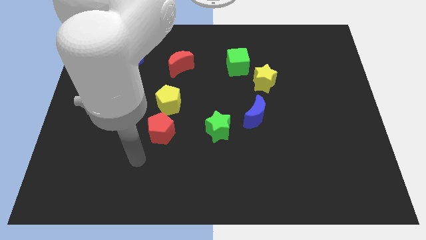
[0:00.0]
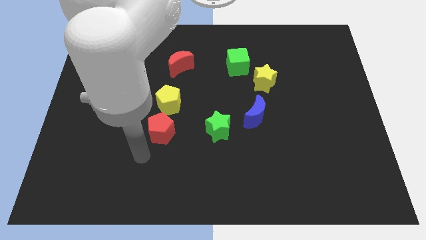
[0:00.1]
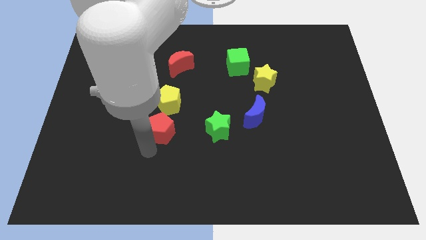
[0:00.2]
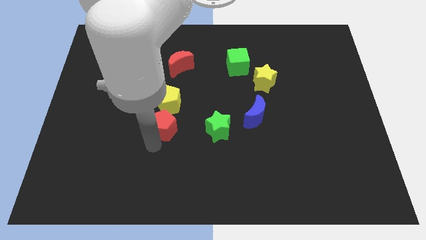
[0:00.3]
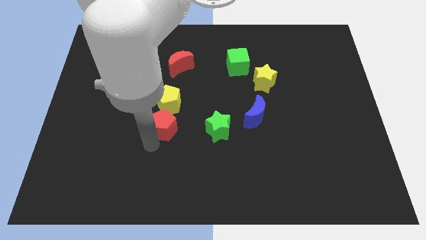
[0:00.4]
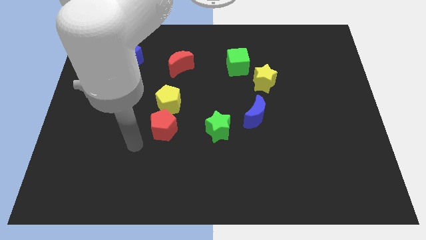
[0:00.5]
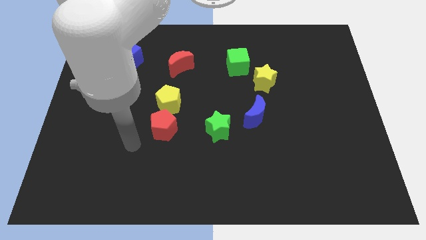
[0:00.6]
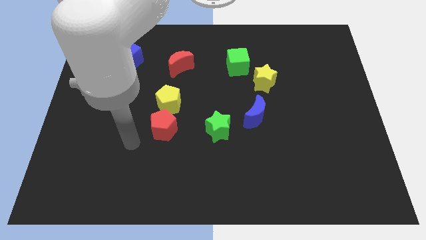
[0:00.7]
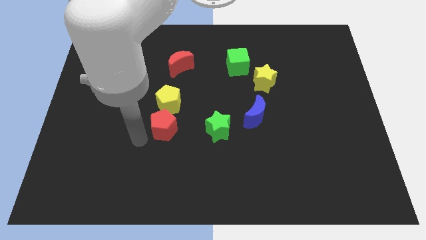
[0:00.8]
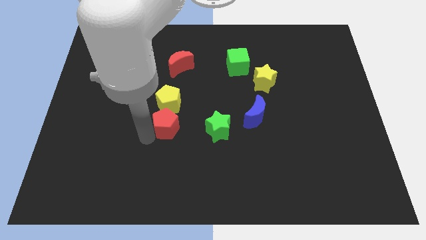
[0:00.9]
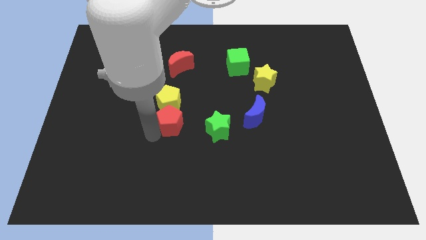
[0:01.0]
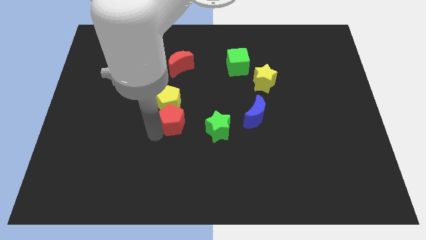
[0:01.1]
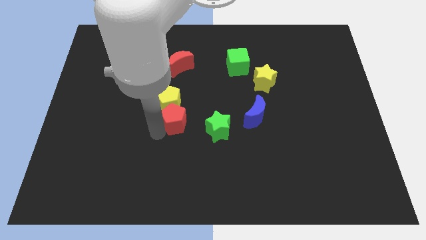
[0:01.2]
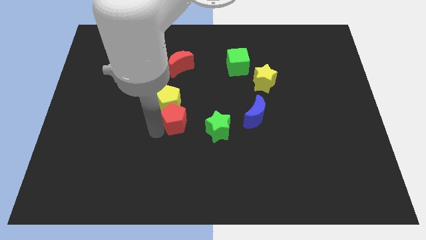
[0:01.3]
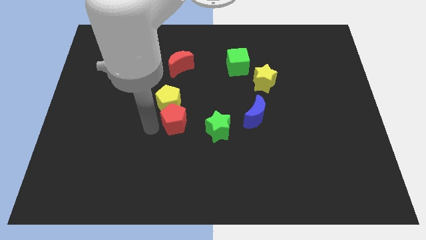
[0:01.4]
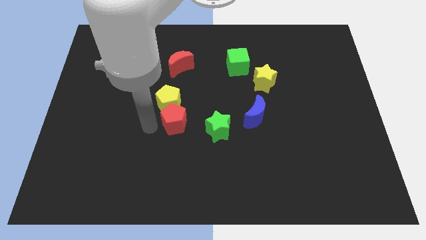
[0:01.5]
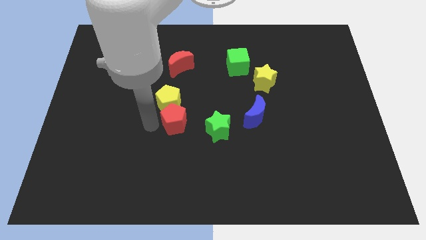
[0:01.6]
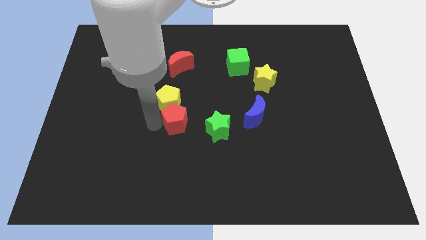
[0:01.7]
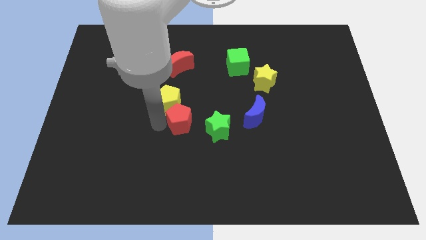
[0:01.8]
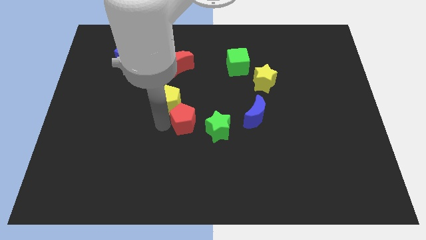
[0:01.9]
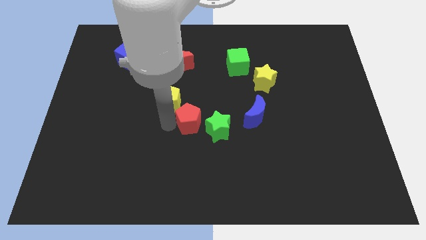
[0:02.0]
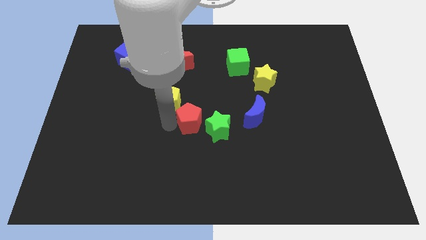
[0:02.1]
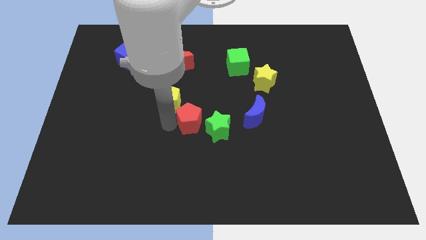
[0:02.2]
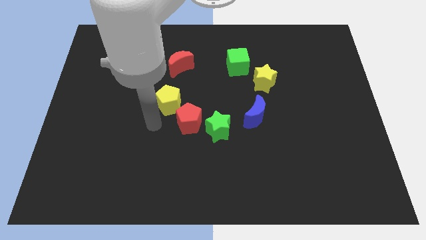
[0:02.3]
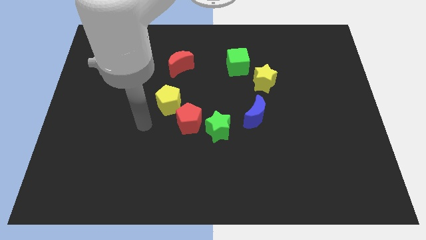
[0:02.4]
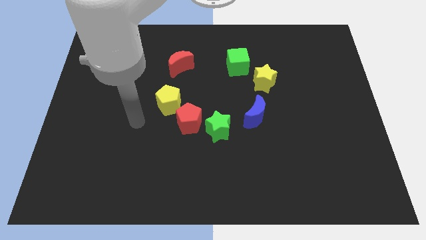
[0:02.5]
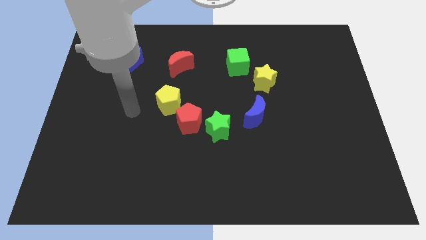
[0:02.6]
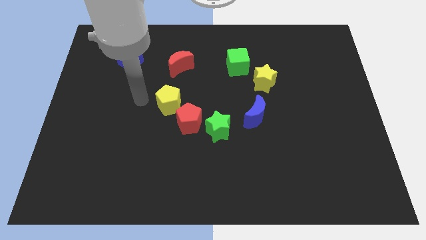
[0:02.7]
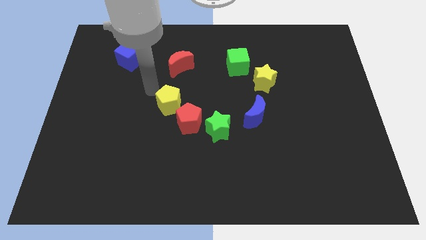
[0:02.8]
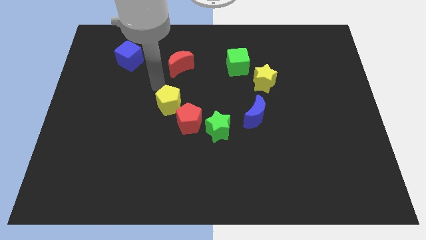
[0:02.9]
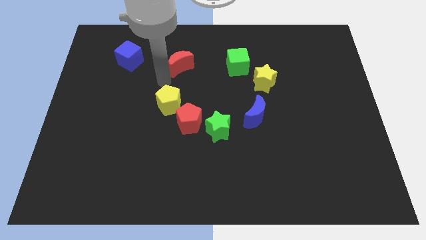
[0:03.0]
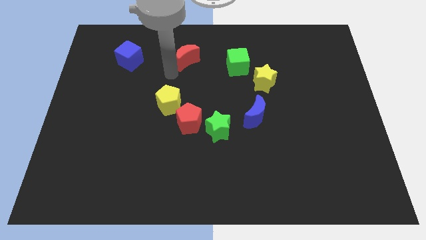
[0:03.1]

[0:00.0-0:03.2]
put the red pentagon in between the yellow pentagon and the green star

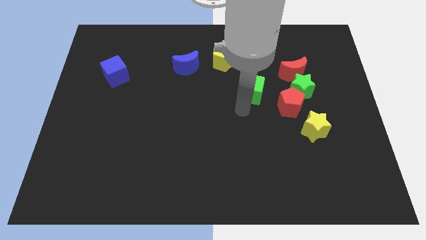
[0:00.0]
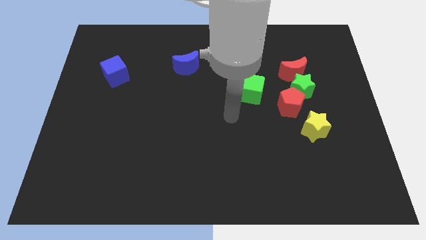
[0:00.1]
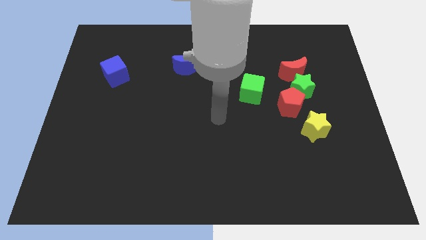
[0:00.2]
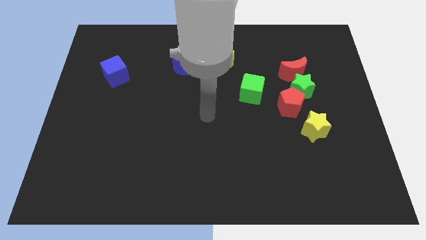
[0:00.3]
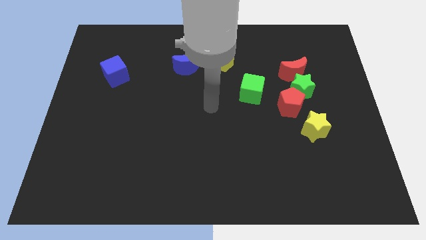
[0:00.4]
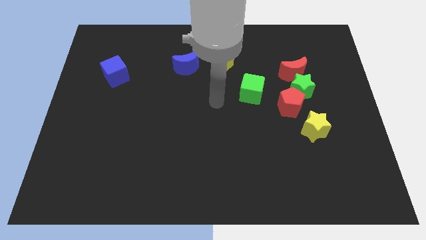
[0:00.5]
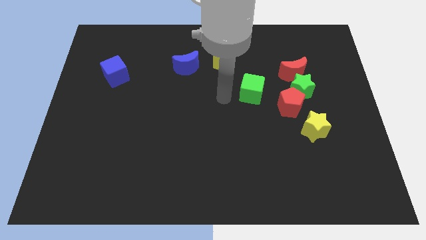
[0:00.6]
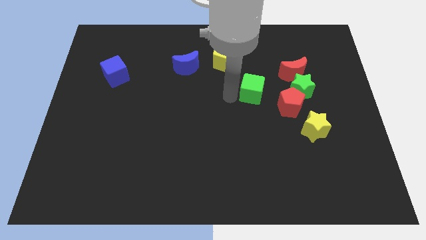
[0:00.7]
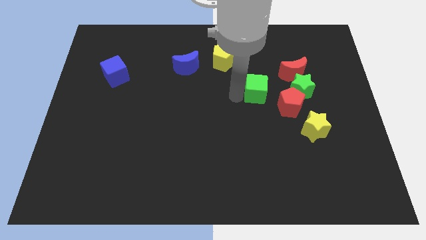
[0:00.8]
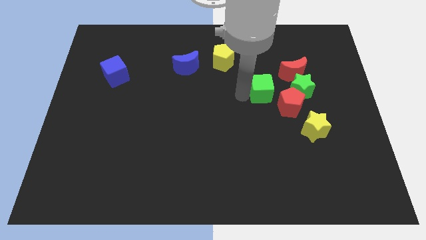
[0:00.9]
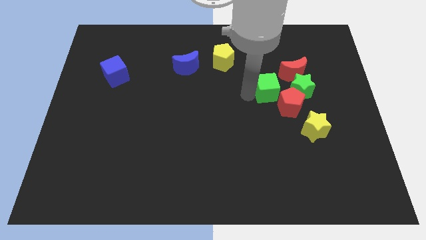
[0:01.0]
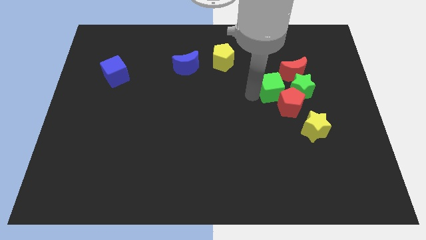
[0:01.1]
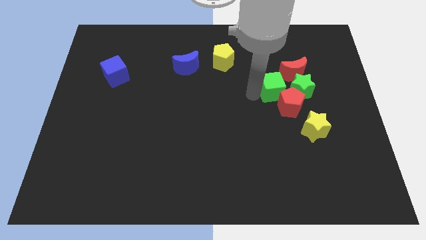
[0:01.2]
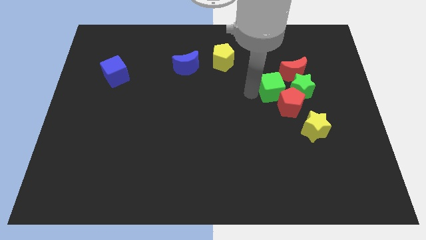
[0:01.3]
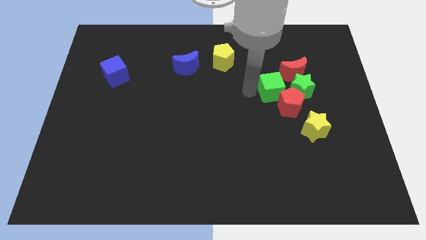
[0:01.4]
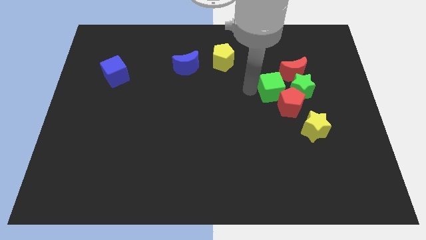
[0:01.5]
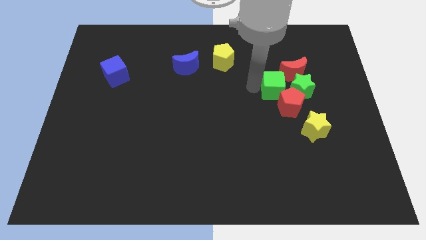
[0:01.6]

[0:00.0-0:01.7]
take the green cube close to the top left of the red pentagon

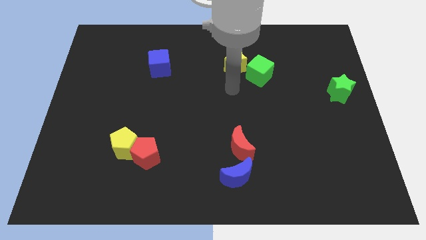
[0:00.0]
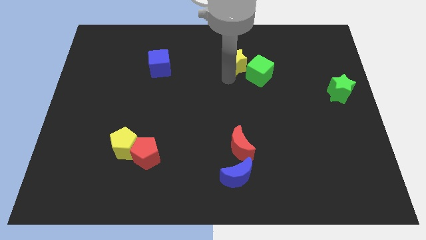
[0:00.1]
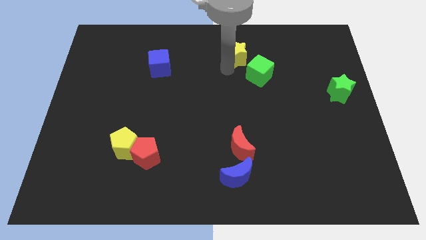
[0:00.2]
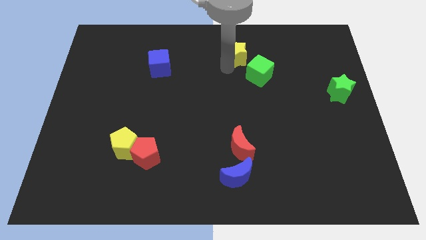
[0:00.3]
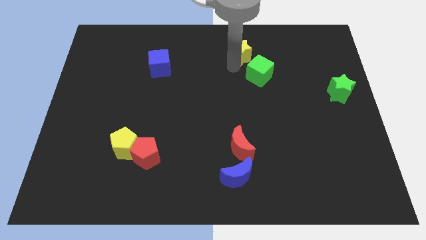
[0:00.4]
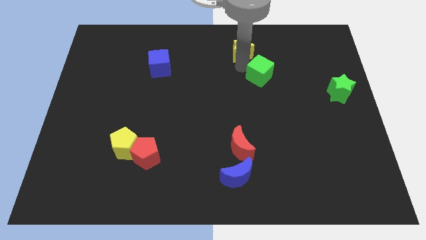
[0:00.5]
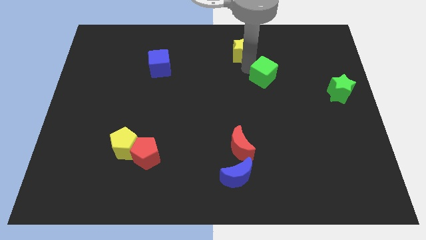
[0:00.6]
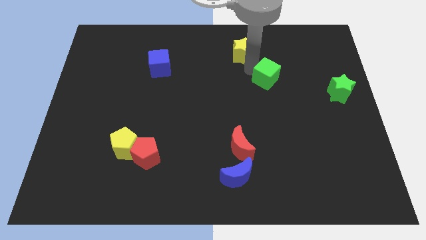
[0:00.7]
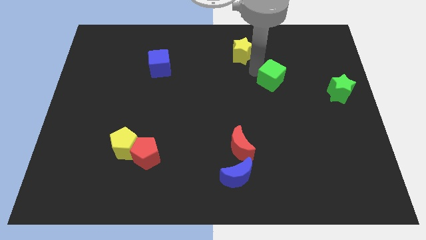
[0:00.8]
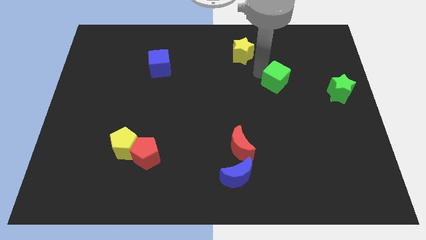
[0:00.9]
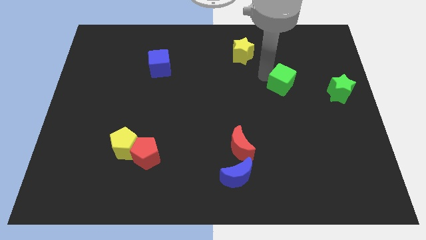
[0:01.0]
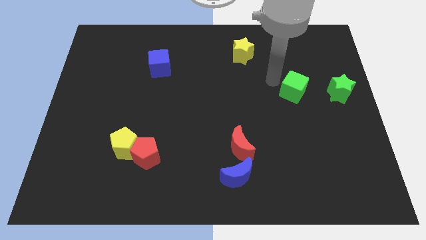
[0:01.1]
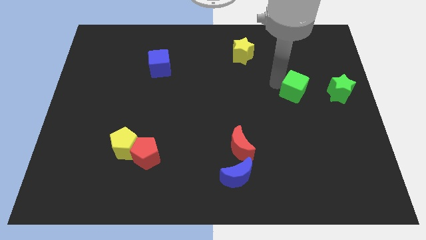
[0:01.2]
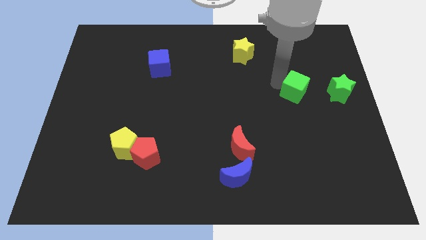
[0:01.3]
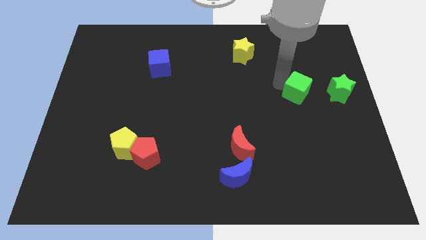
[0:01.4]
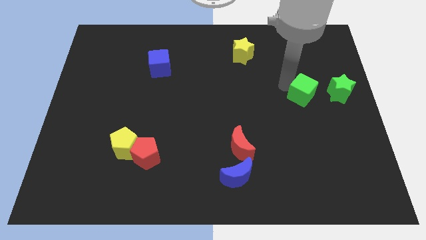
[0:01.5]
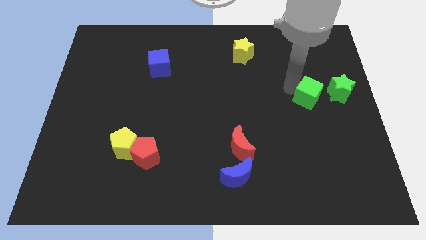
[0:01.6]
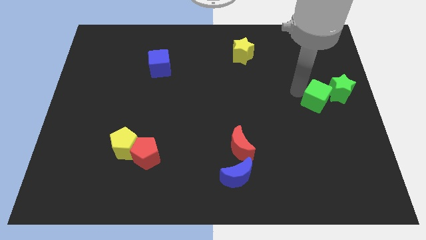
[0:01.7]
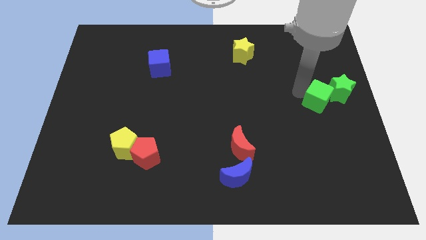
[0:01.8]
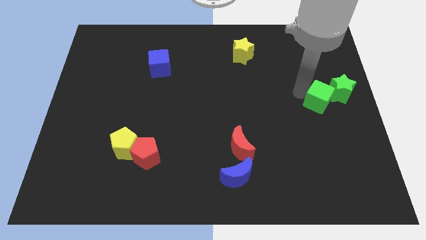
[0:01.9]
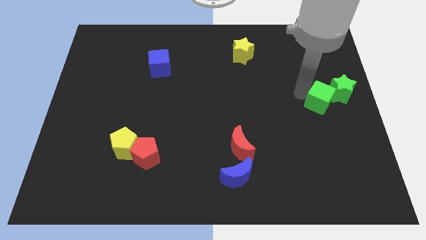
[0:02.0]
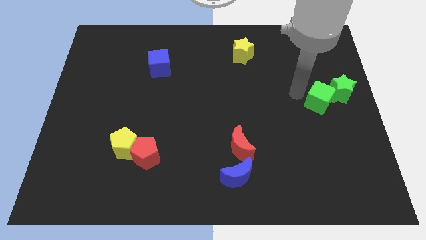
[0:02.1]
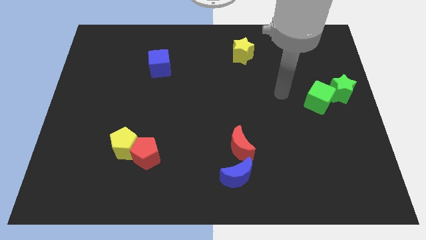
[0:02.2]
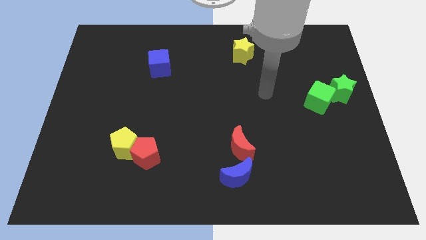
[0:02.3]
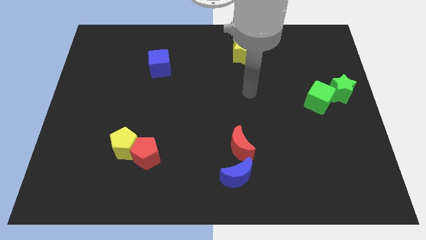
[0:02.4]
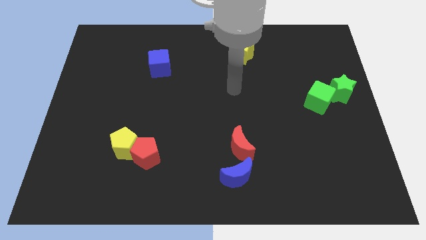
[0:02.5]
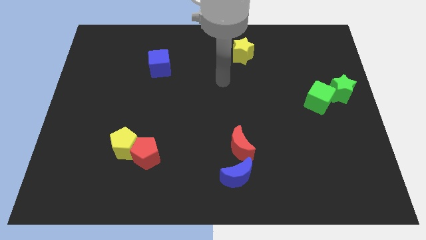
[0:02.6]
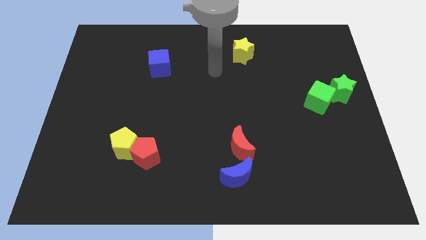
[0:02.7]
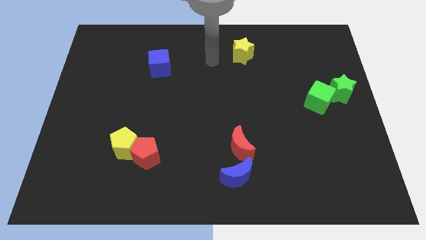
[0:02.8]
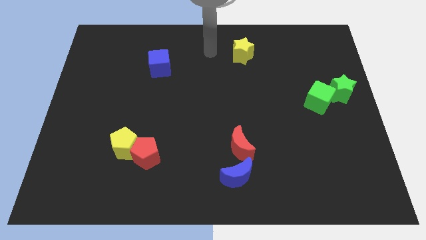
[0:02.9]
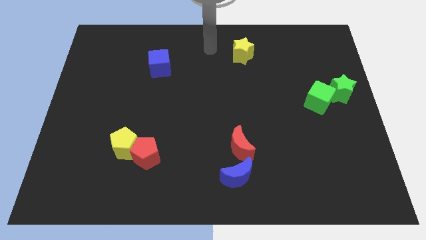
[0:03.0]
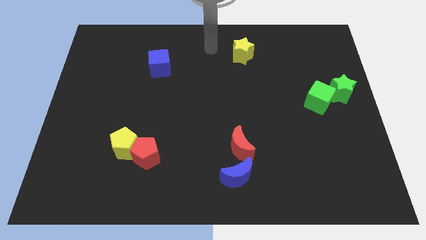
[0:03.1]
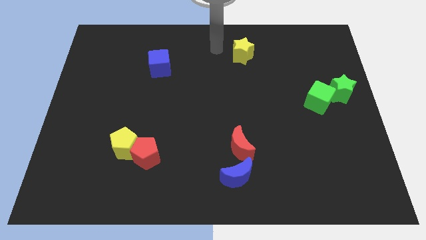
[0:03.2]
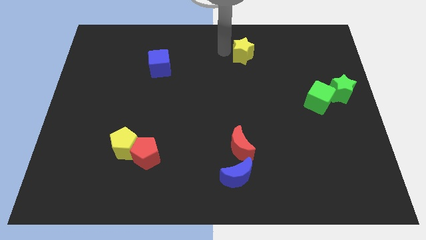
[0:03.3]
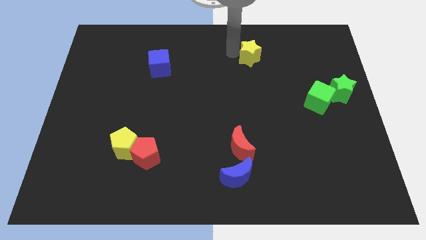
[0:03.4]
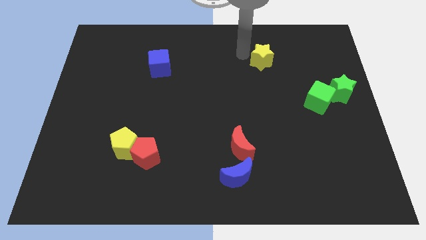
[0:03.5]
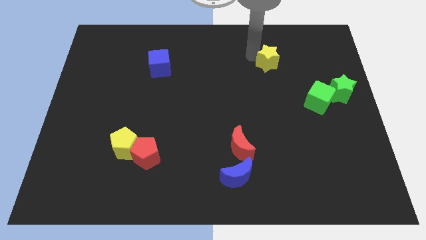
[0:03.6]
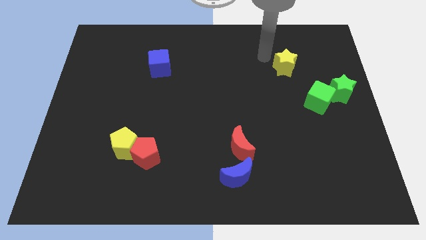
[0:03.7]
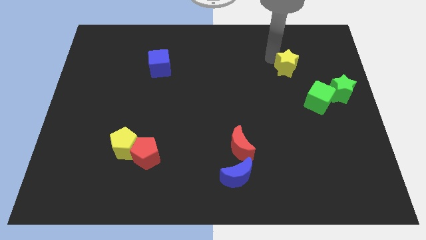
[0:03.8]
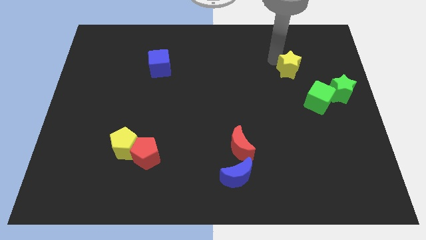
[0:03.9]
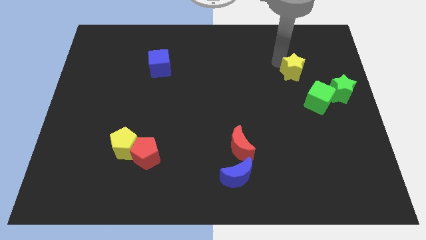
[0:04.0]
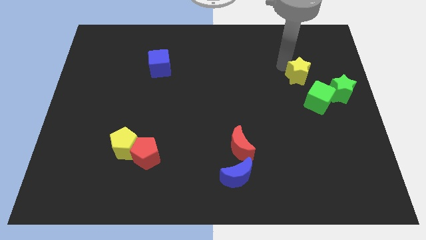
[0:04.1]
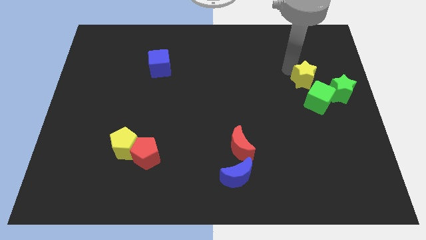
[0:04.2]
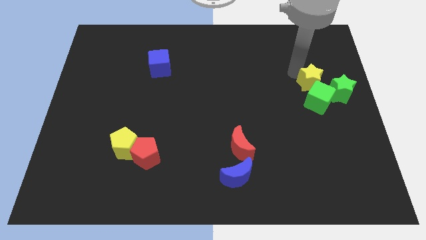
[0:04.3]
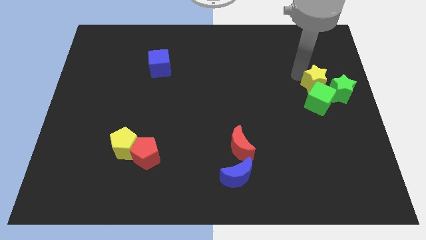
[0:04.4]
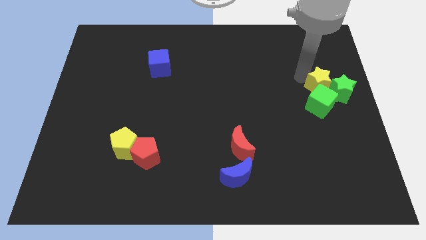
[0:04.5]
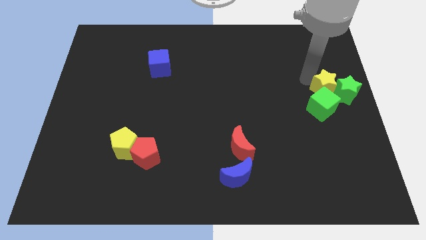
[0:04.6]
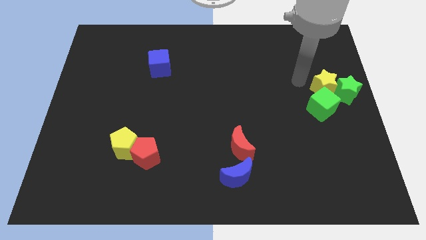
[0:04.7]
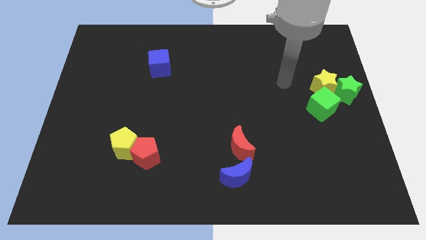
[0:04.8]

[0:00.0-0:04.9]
push the green cube and yellow star into the green star
